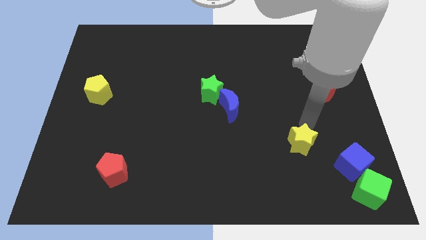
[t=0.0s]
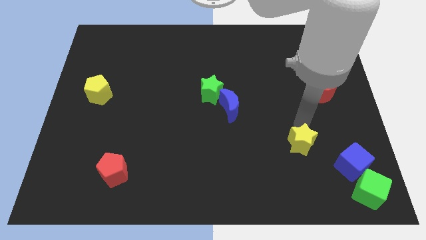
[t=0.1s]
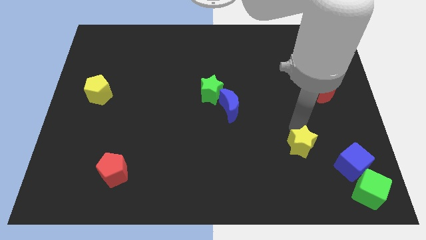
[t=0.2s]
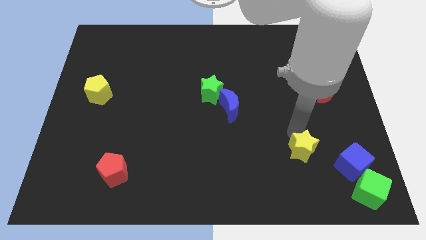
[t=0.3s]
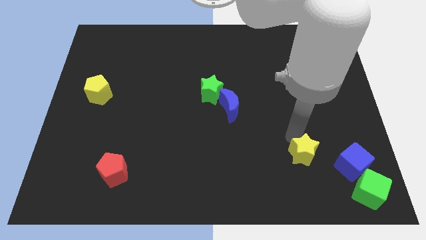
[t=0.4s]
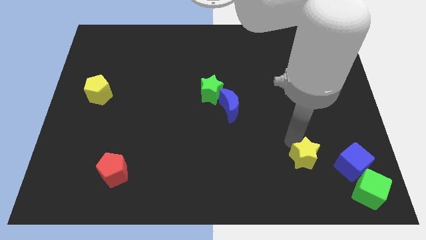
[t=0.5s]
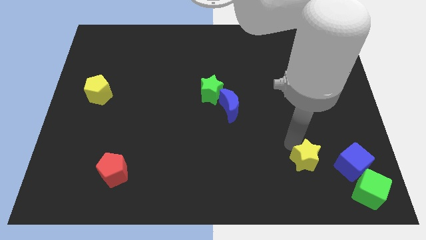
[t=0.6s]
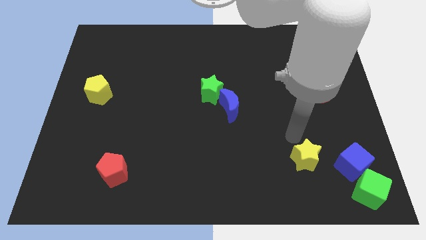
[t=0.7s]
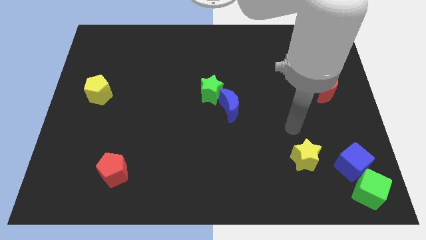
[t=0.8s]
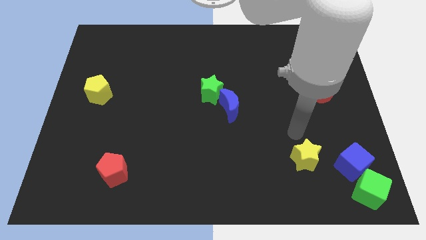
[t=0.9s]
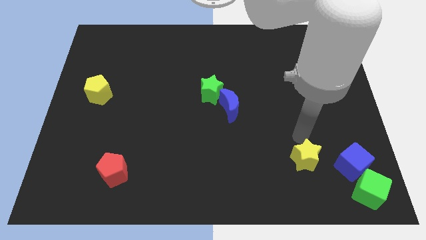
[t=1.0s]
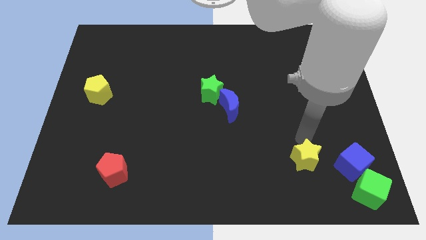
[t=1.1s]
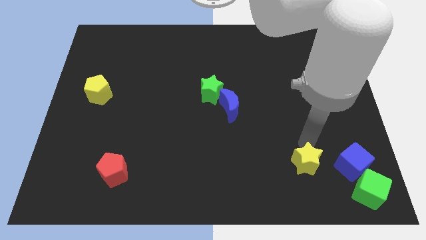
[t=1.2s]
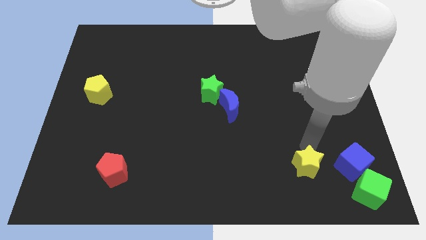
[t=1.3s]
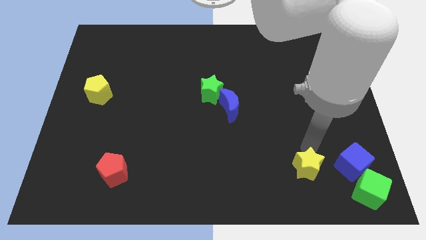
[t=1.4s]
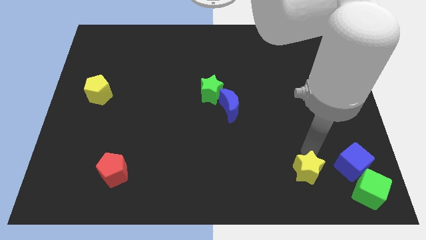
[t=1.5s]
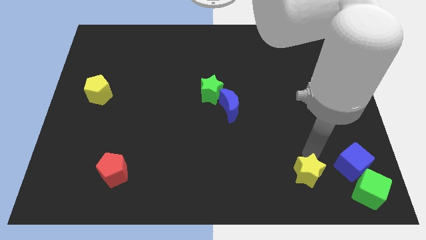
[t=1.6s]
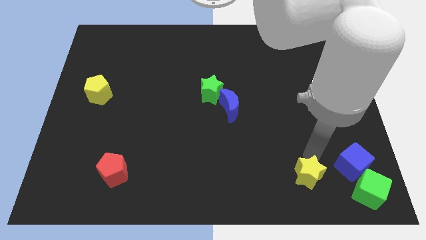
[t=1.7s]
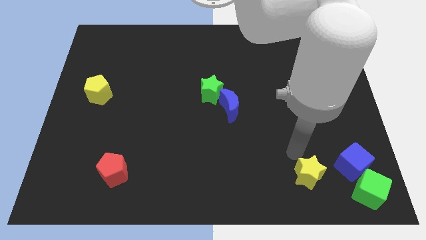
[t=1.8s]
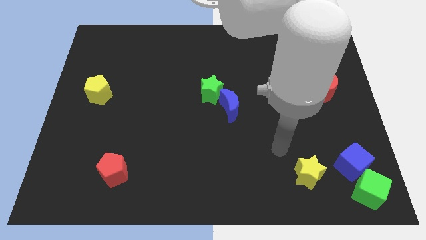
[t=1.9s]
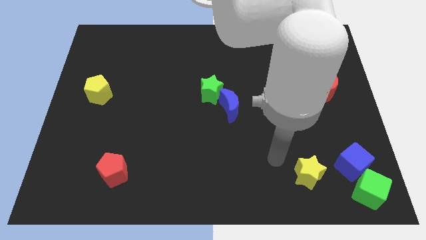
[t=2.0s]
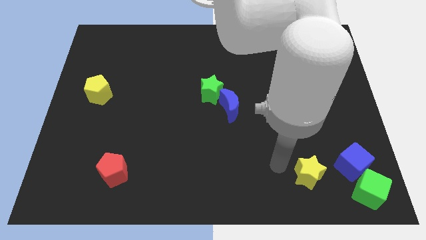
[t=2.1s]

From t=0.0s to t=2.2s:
slide the yellow star slightly towards down

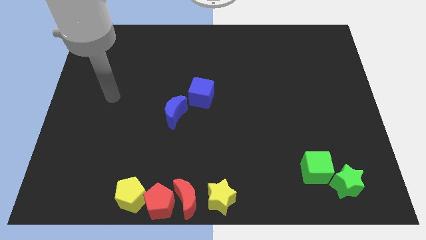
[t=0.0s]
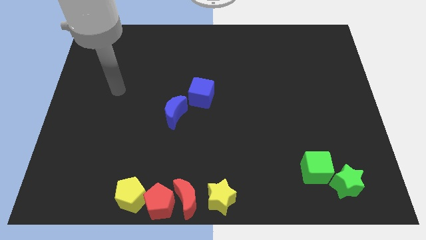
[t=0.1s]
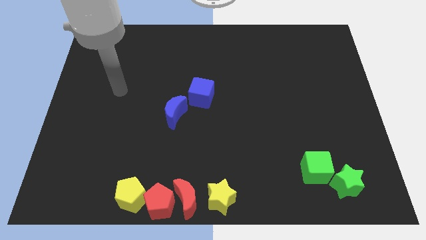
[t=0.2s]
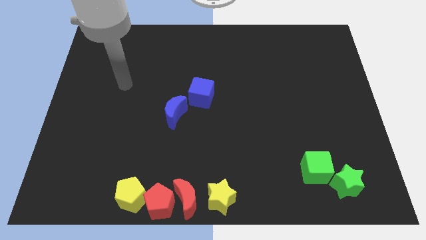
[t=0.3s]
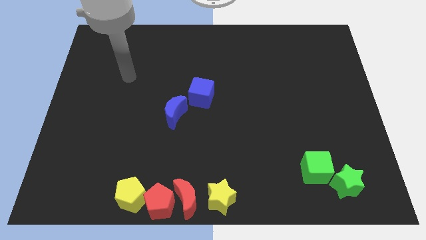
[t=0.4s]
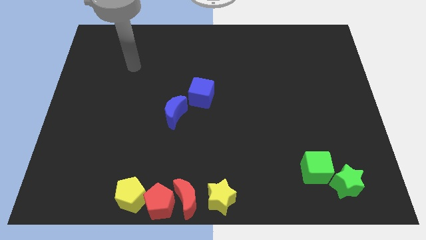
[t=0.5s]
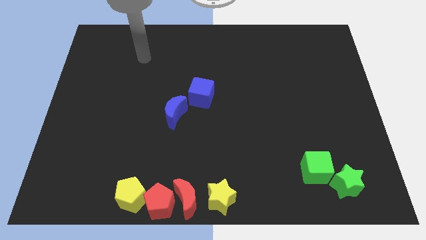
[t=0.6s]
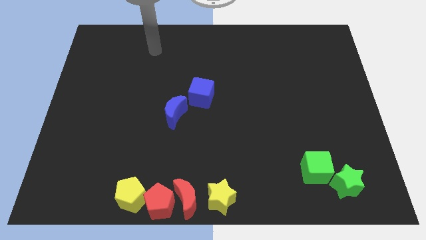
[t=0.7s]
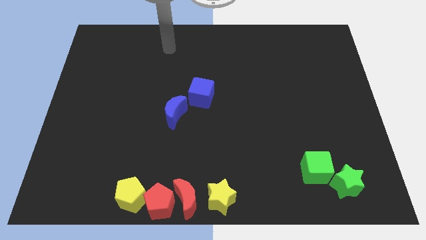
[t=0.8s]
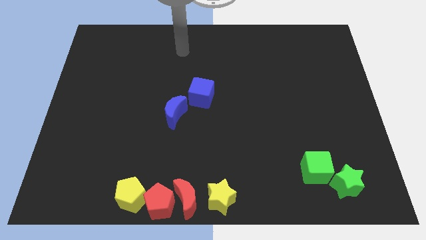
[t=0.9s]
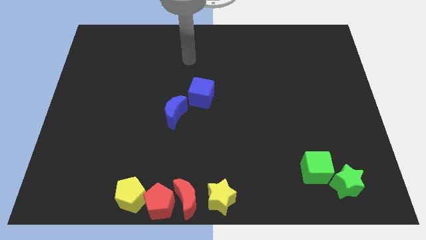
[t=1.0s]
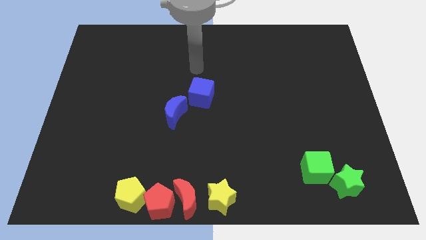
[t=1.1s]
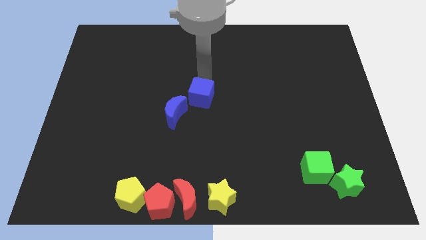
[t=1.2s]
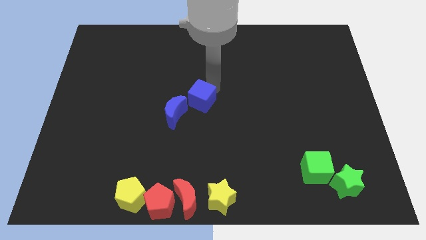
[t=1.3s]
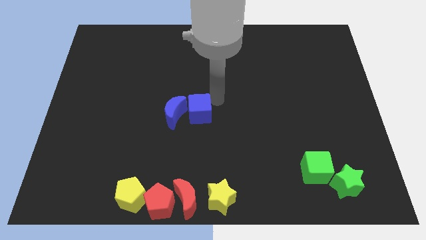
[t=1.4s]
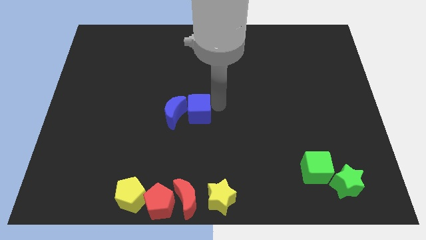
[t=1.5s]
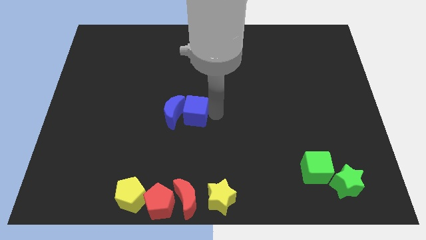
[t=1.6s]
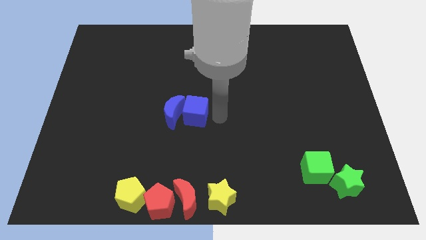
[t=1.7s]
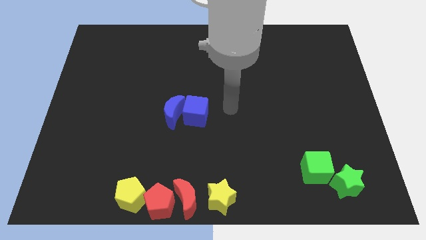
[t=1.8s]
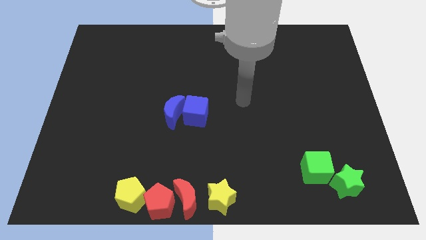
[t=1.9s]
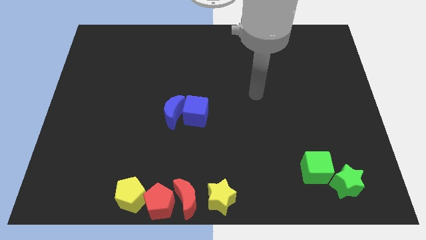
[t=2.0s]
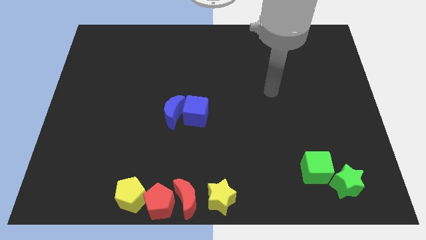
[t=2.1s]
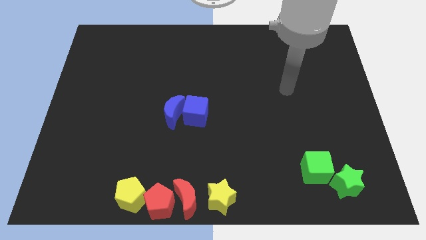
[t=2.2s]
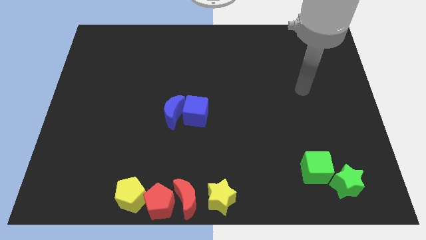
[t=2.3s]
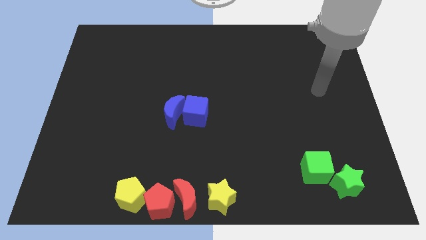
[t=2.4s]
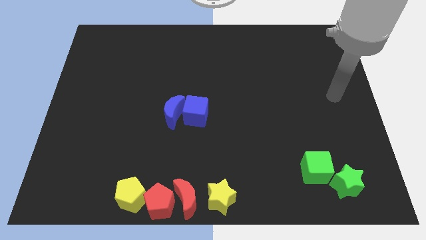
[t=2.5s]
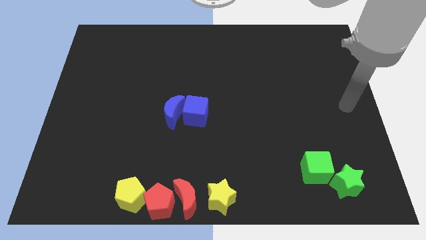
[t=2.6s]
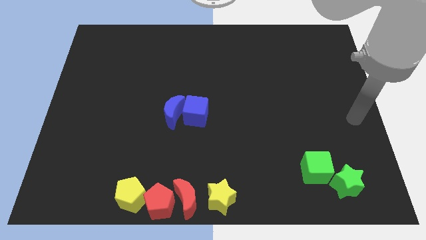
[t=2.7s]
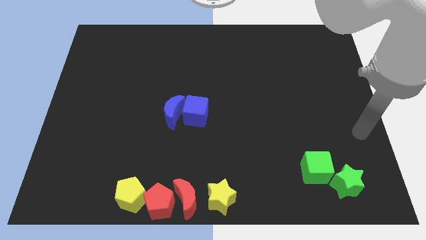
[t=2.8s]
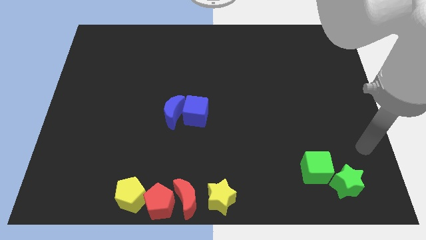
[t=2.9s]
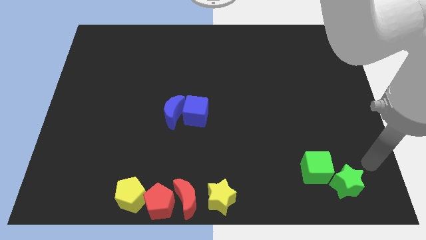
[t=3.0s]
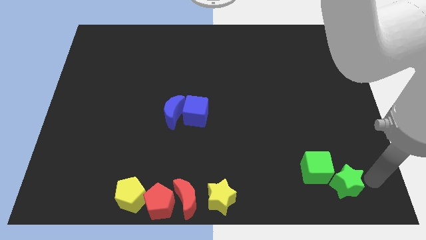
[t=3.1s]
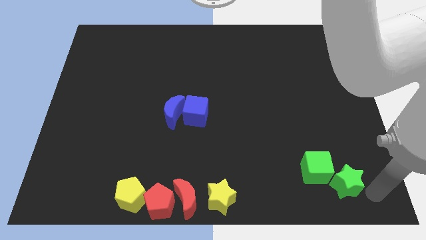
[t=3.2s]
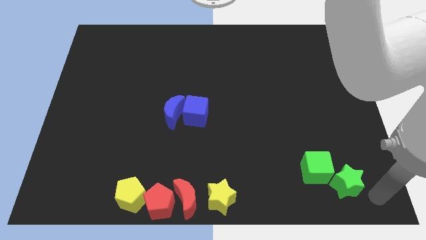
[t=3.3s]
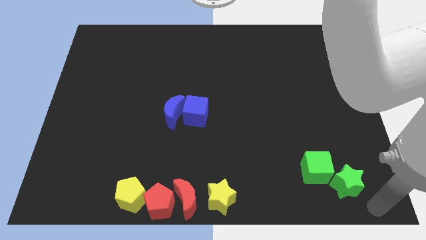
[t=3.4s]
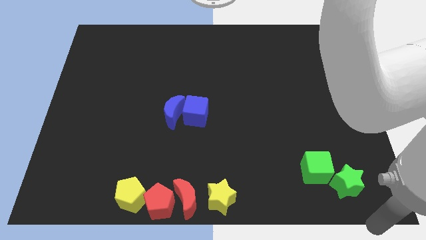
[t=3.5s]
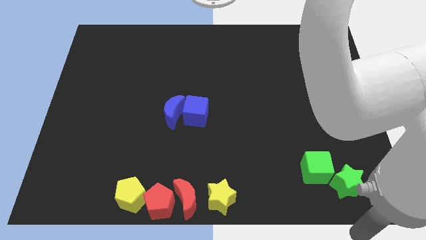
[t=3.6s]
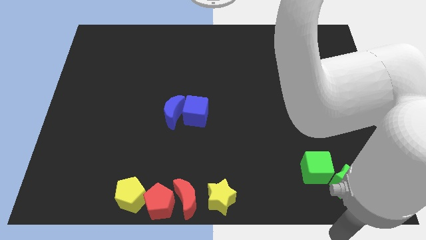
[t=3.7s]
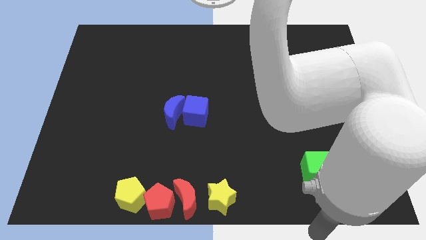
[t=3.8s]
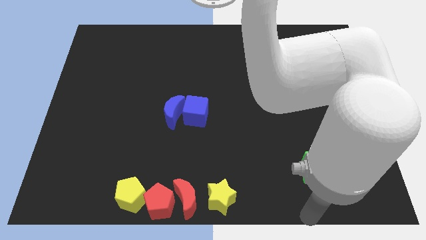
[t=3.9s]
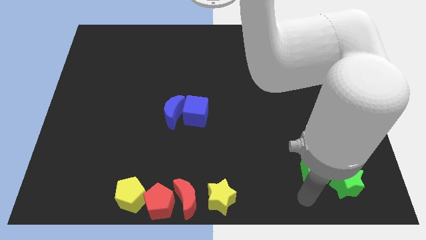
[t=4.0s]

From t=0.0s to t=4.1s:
slide the blue cube to the right side of the blue moon

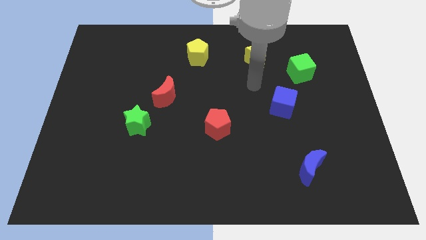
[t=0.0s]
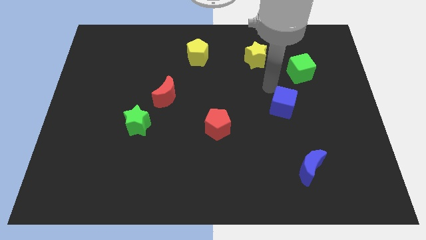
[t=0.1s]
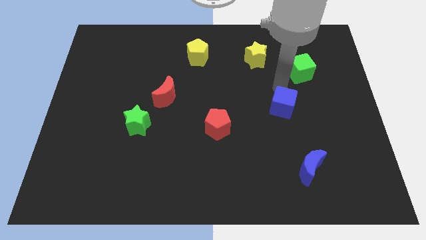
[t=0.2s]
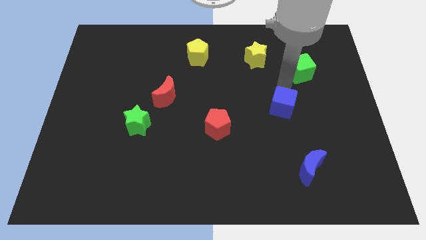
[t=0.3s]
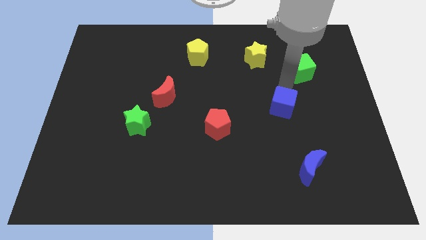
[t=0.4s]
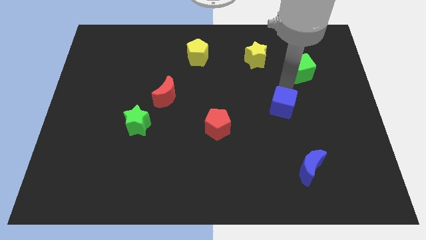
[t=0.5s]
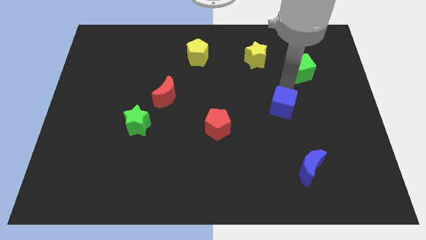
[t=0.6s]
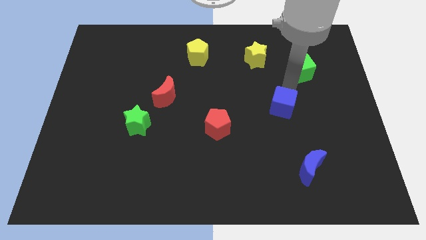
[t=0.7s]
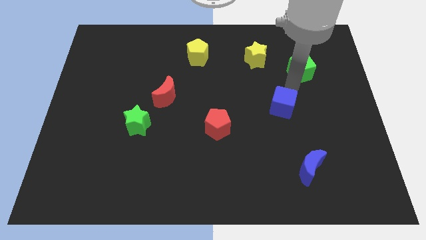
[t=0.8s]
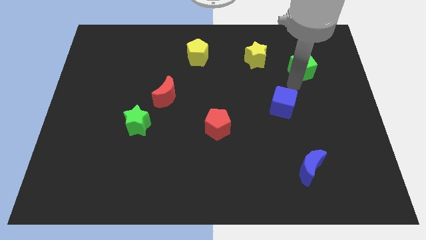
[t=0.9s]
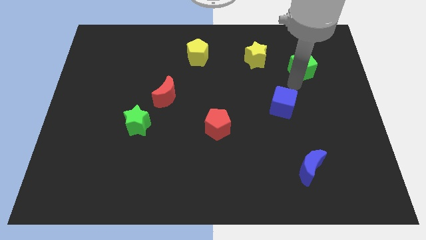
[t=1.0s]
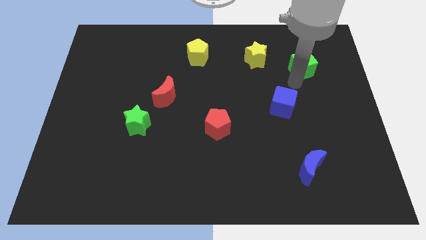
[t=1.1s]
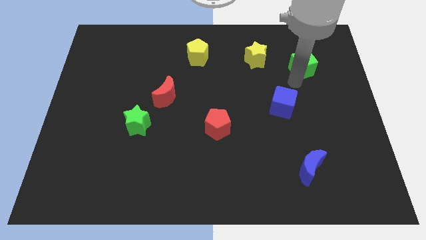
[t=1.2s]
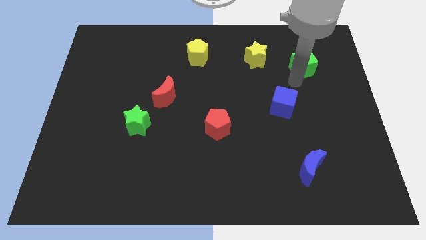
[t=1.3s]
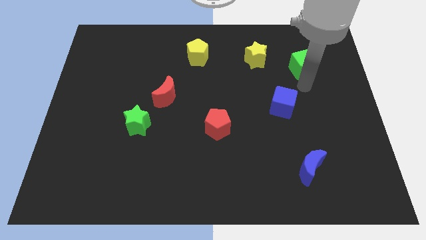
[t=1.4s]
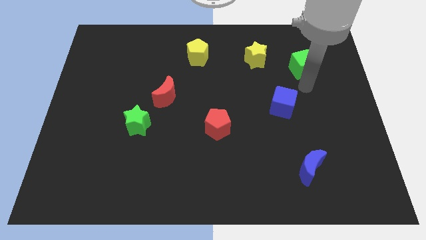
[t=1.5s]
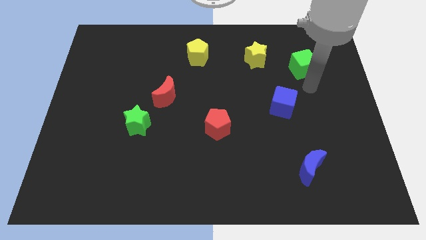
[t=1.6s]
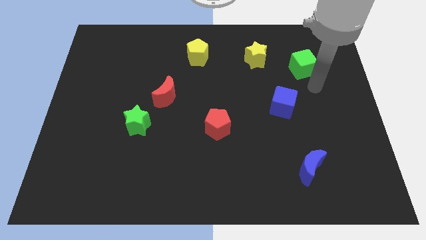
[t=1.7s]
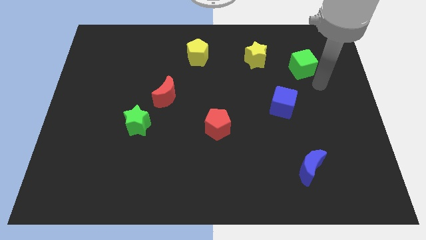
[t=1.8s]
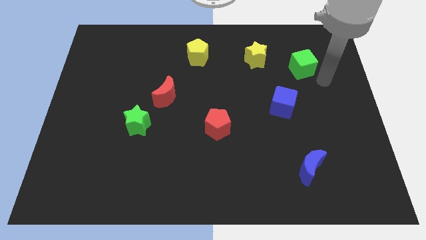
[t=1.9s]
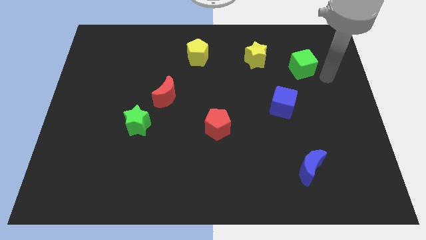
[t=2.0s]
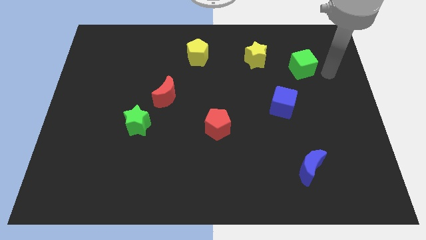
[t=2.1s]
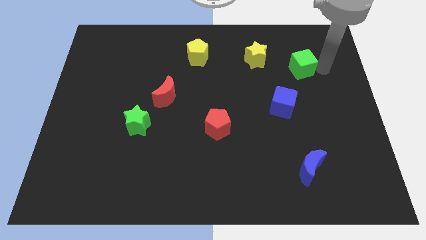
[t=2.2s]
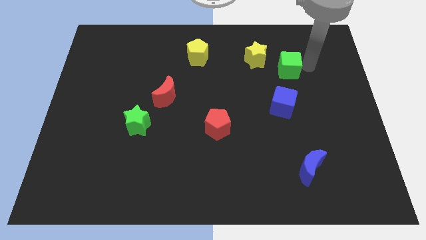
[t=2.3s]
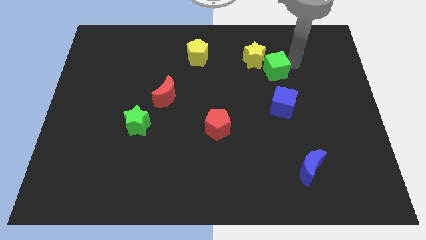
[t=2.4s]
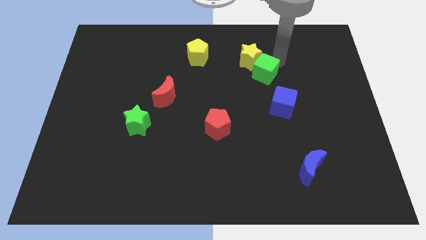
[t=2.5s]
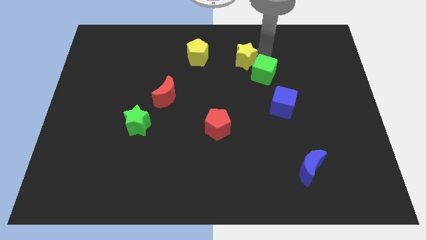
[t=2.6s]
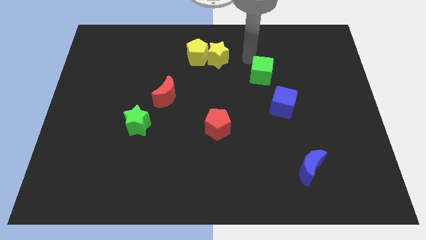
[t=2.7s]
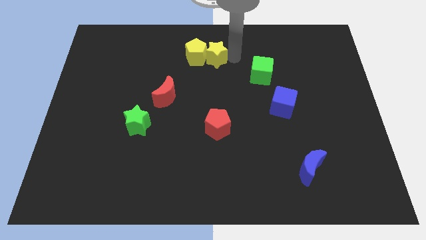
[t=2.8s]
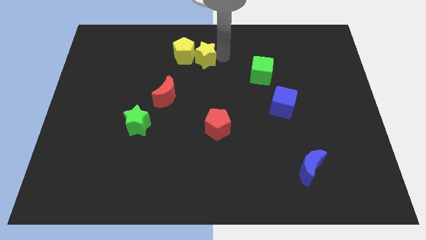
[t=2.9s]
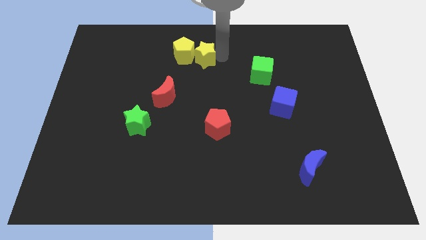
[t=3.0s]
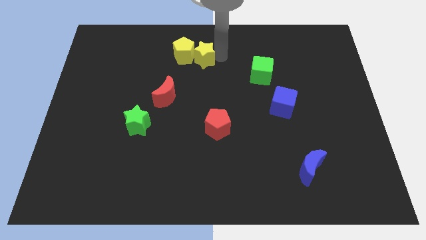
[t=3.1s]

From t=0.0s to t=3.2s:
push the yellow star into the yellow pentagon
